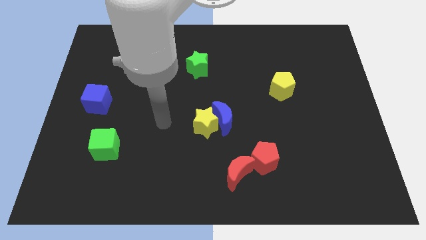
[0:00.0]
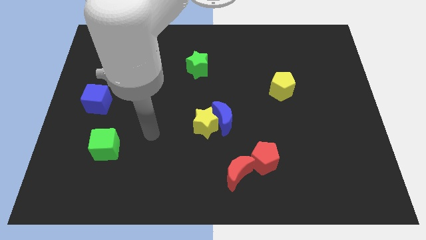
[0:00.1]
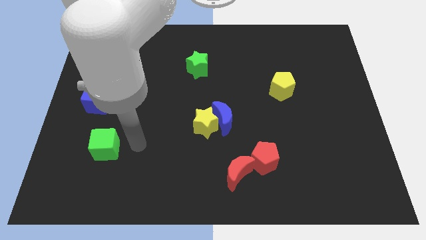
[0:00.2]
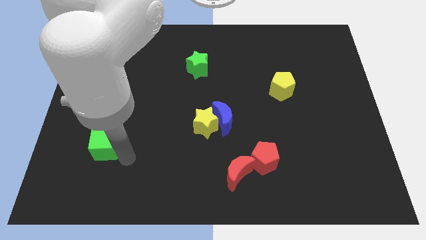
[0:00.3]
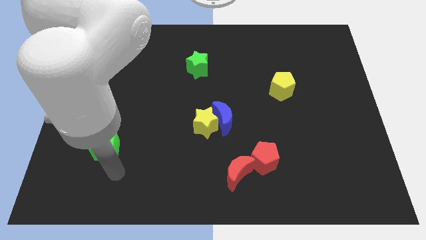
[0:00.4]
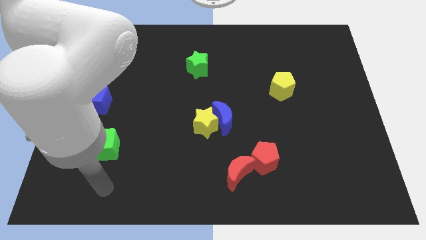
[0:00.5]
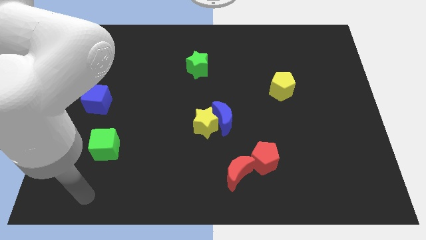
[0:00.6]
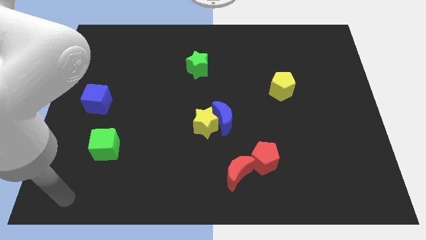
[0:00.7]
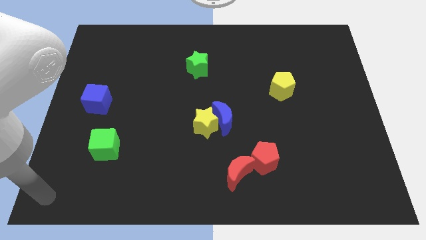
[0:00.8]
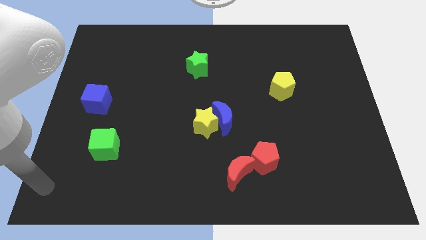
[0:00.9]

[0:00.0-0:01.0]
move arm bottom left of the board

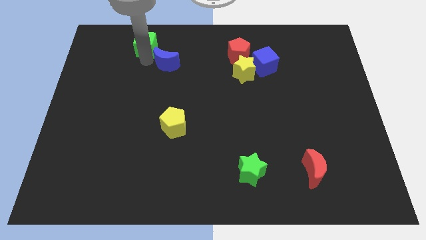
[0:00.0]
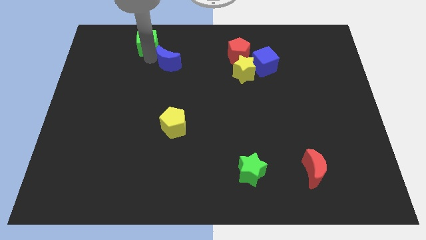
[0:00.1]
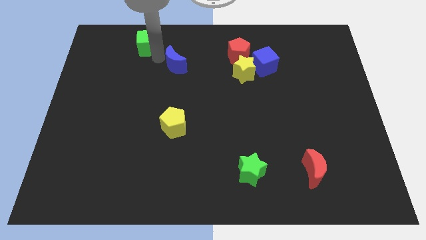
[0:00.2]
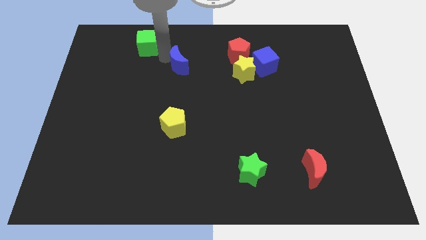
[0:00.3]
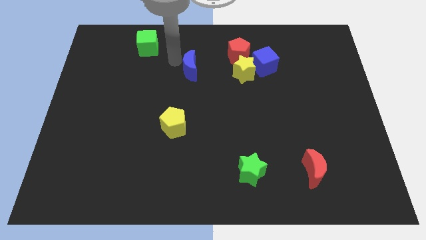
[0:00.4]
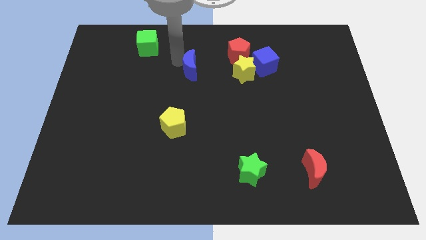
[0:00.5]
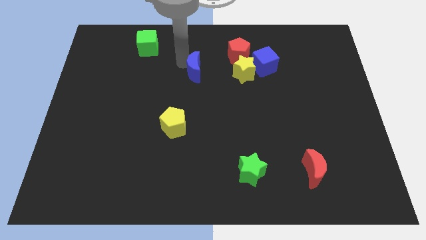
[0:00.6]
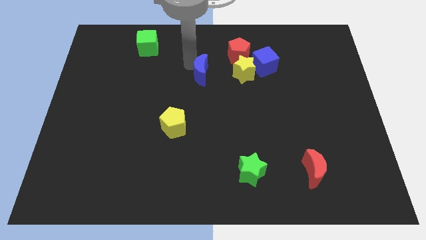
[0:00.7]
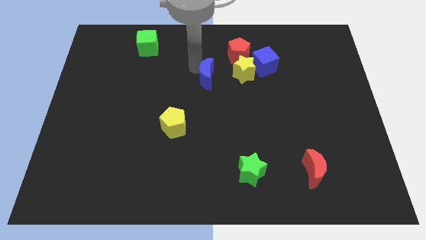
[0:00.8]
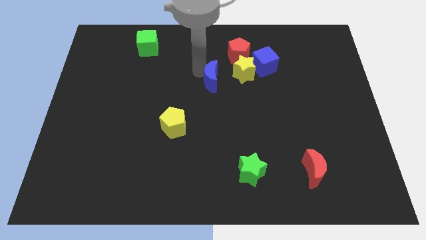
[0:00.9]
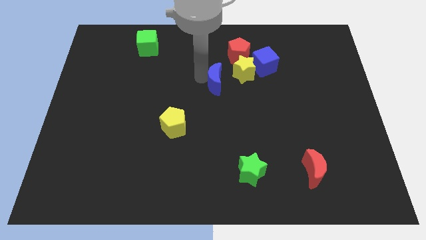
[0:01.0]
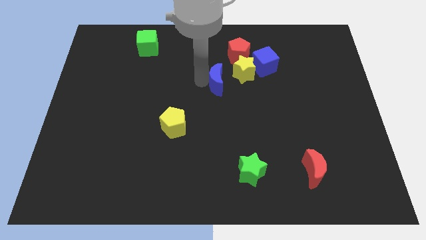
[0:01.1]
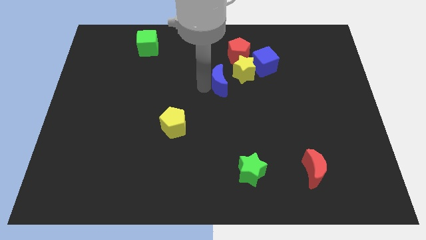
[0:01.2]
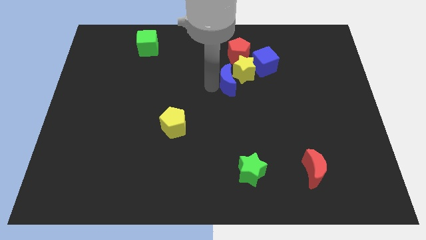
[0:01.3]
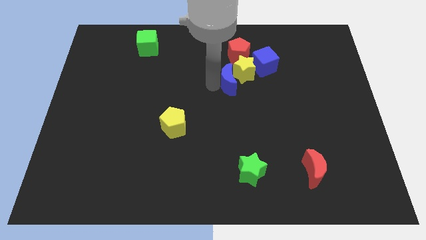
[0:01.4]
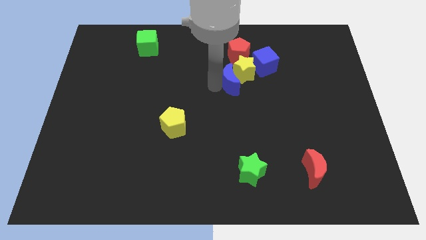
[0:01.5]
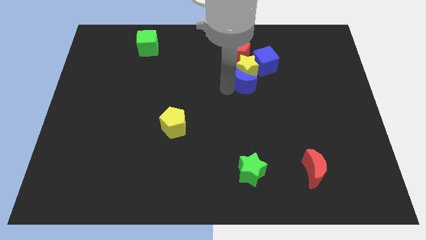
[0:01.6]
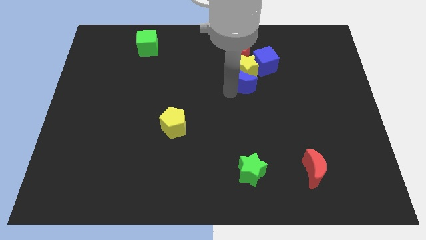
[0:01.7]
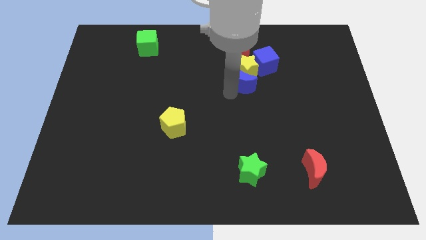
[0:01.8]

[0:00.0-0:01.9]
move the blue moon close to the yellow star

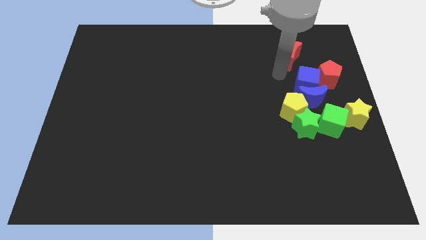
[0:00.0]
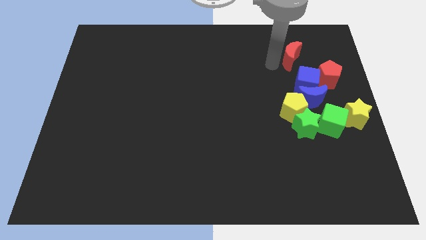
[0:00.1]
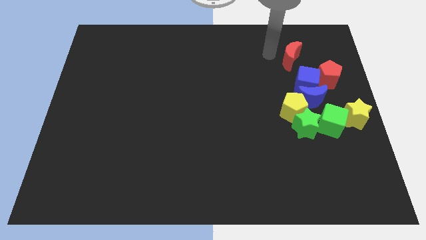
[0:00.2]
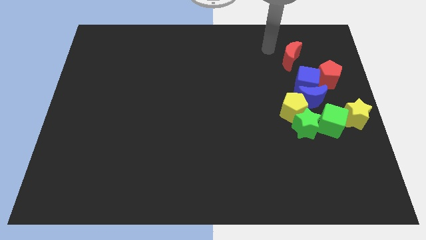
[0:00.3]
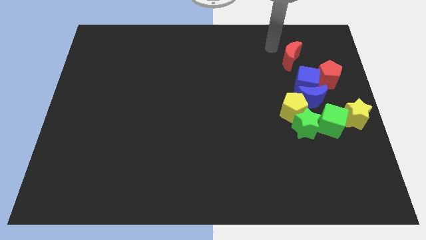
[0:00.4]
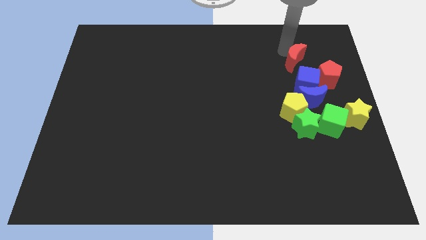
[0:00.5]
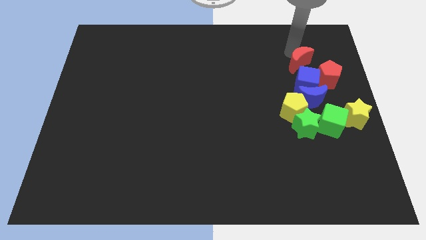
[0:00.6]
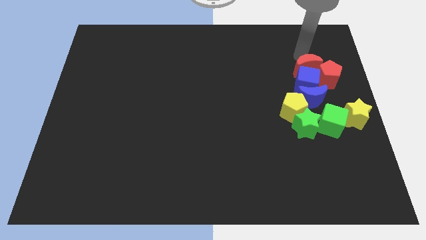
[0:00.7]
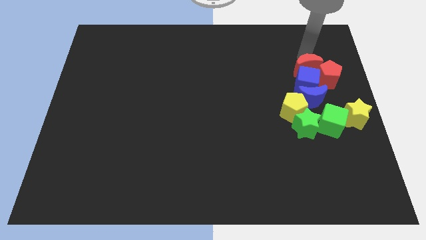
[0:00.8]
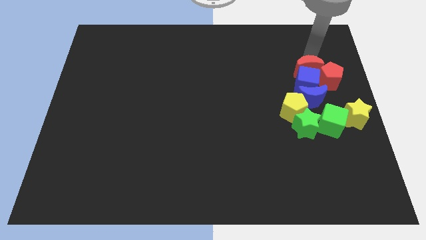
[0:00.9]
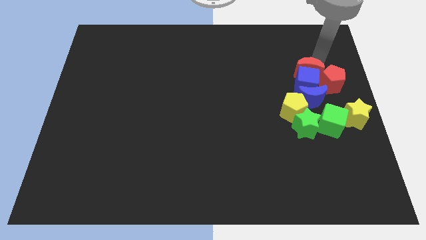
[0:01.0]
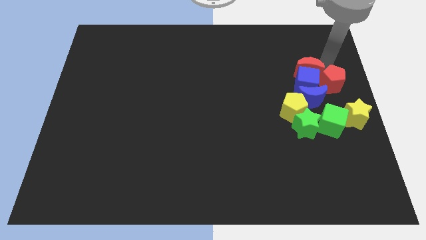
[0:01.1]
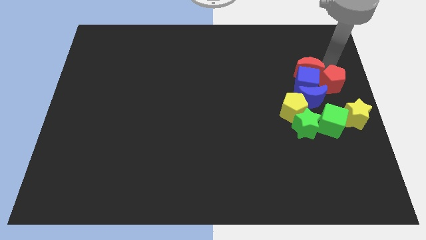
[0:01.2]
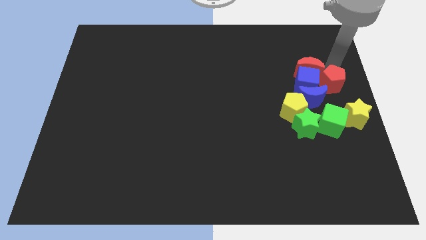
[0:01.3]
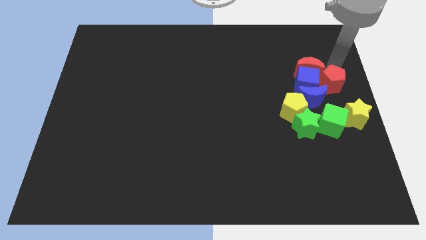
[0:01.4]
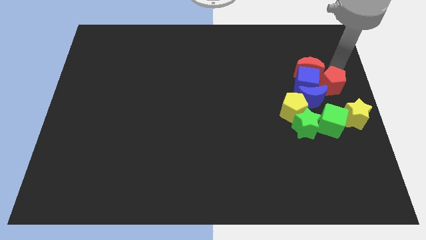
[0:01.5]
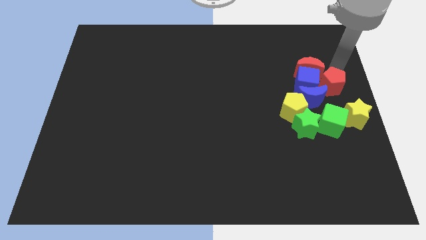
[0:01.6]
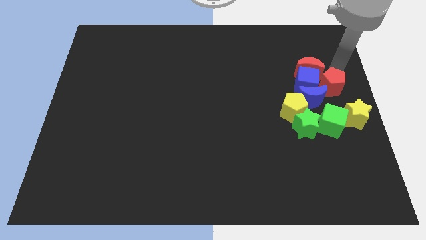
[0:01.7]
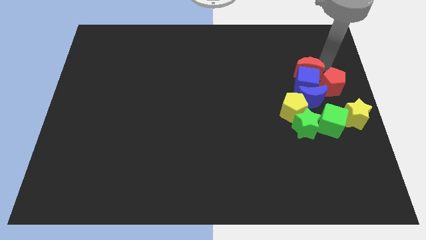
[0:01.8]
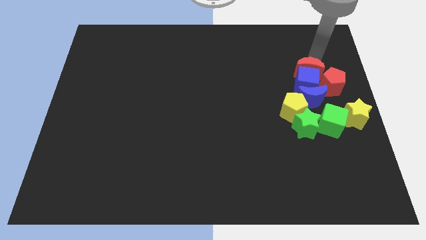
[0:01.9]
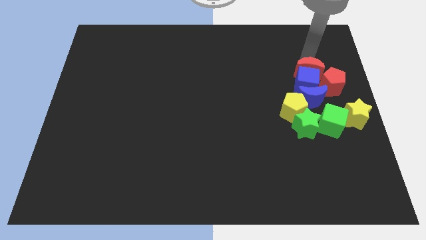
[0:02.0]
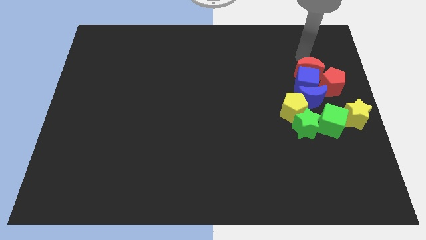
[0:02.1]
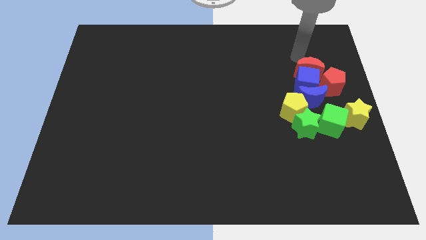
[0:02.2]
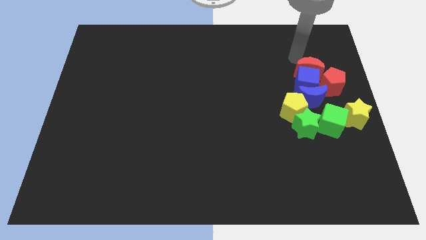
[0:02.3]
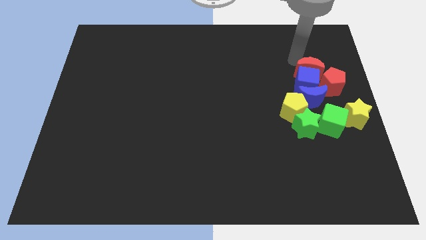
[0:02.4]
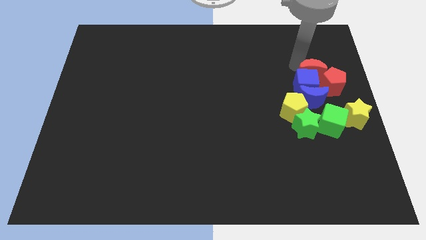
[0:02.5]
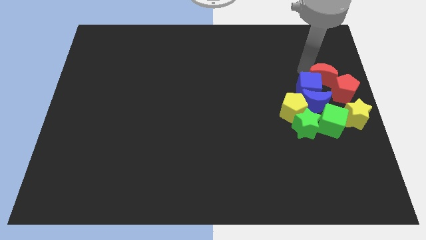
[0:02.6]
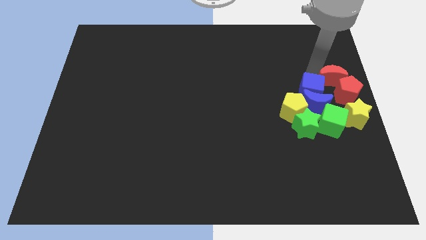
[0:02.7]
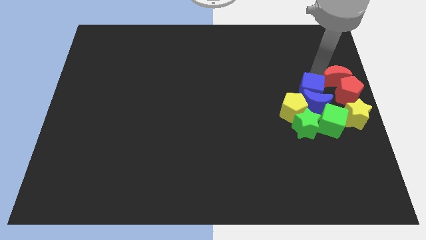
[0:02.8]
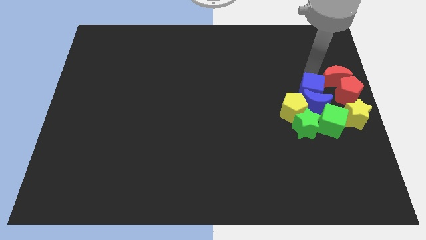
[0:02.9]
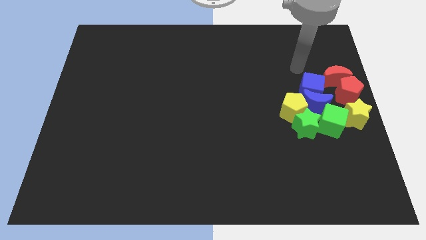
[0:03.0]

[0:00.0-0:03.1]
move red blocks to the right of the blue blocks

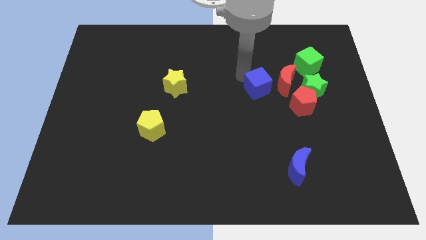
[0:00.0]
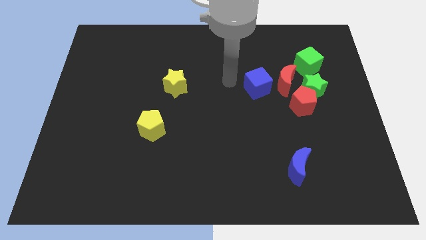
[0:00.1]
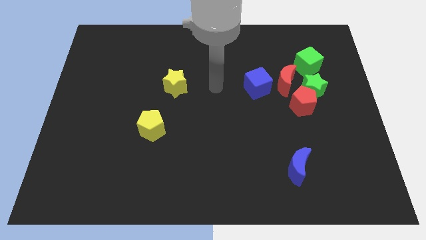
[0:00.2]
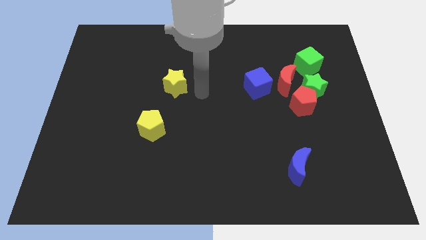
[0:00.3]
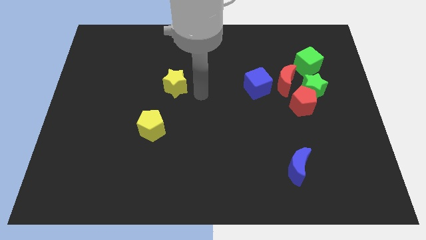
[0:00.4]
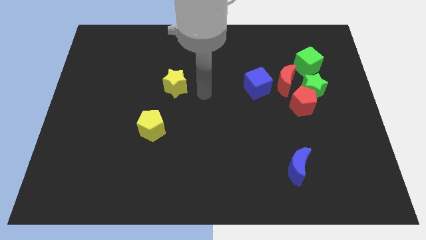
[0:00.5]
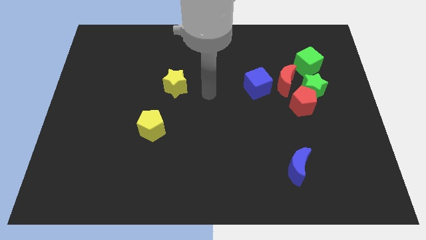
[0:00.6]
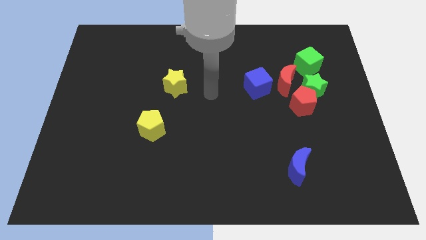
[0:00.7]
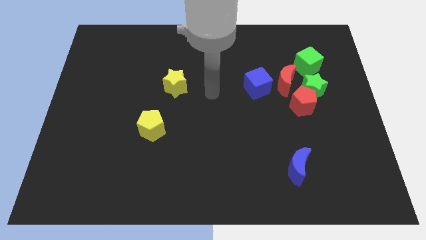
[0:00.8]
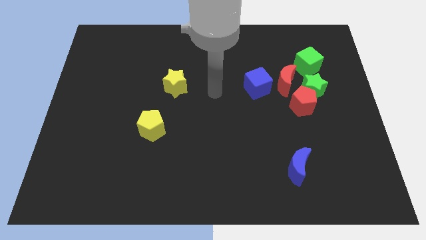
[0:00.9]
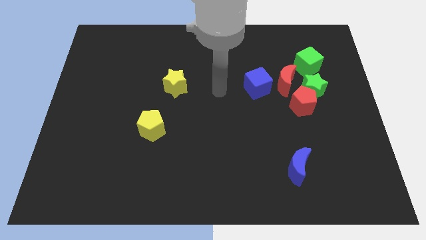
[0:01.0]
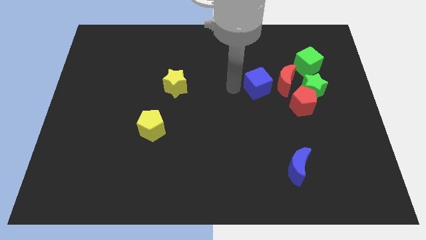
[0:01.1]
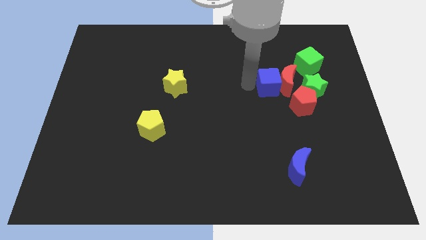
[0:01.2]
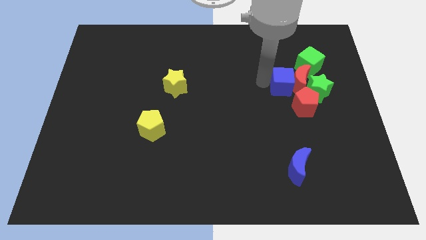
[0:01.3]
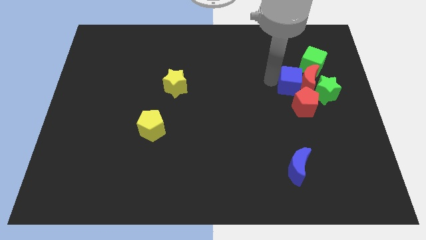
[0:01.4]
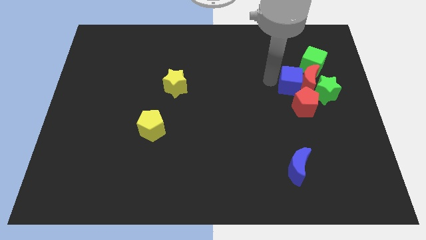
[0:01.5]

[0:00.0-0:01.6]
move blue cube into red moon

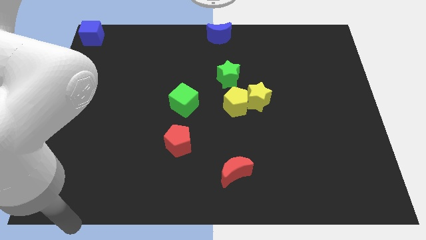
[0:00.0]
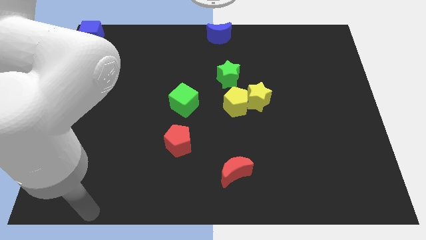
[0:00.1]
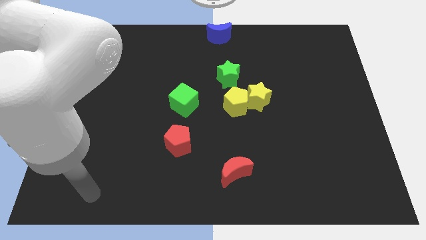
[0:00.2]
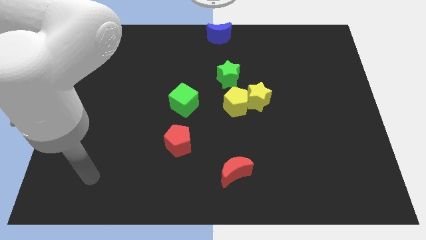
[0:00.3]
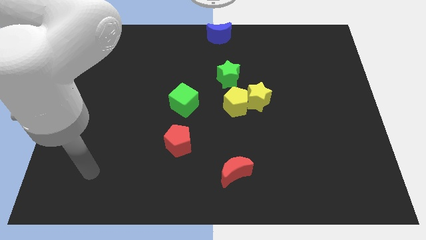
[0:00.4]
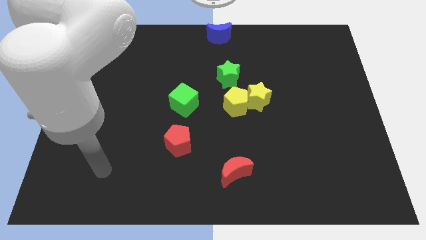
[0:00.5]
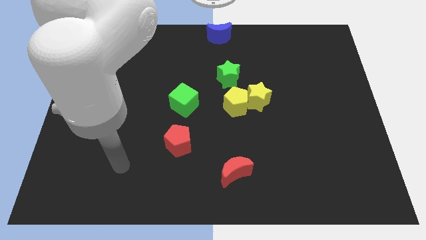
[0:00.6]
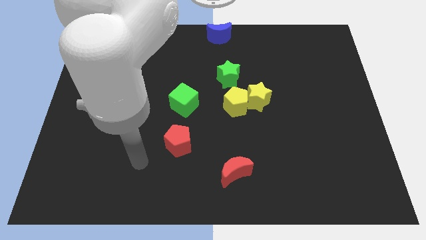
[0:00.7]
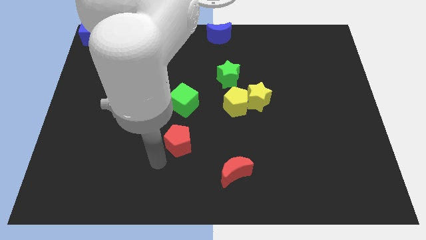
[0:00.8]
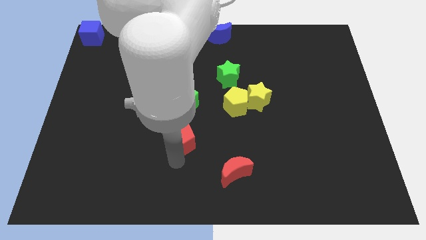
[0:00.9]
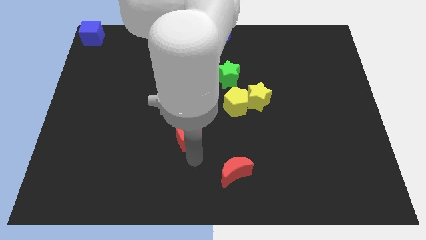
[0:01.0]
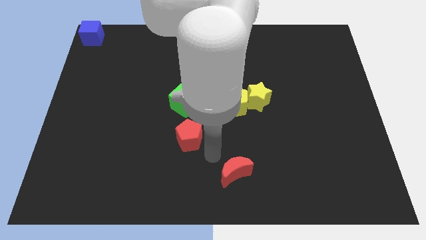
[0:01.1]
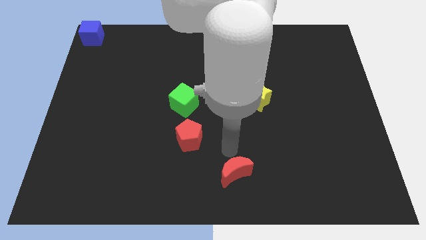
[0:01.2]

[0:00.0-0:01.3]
place your arm in between the red blocks
